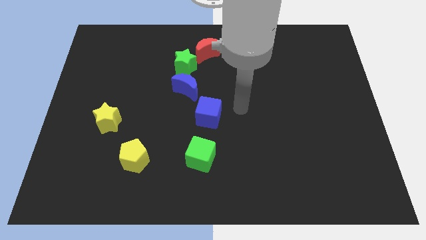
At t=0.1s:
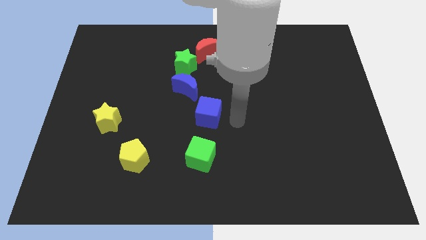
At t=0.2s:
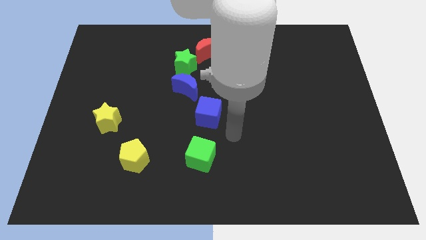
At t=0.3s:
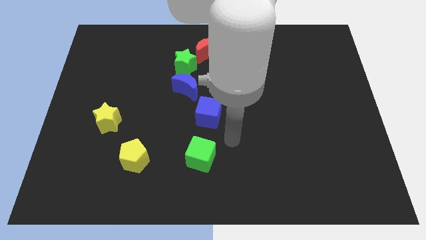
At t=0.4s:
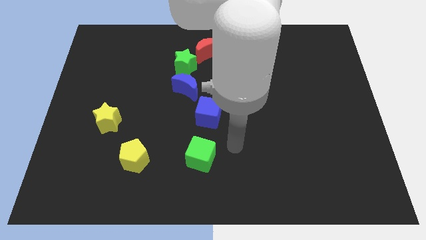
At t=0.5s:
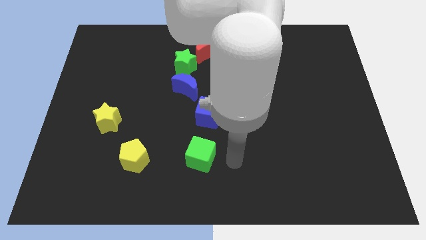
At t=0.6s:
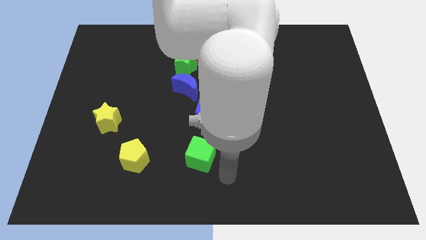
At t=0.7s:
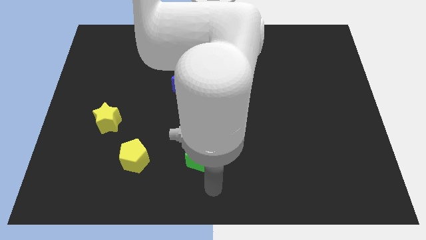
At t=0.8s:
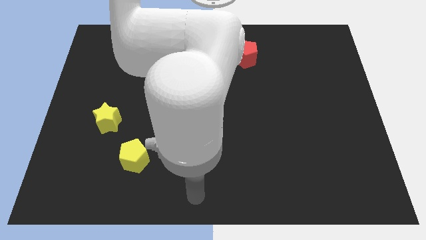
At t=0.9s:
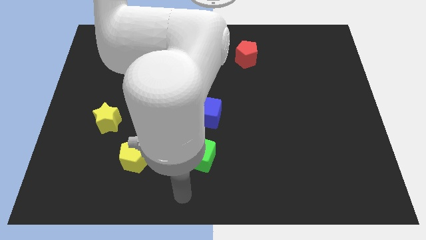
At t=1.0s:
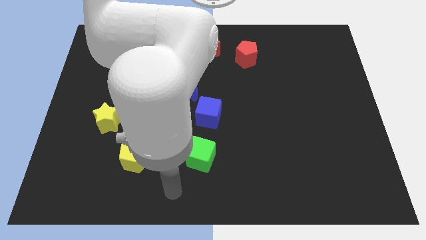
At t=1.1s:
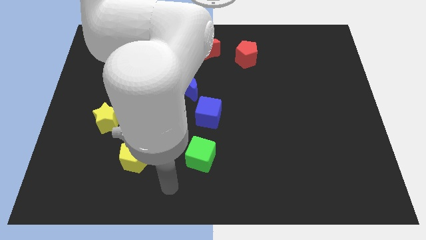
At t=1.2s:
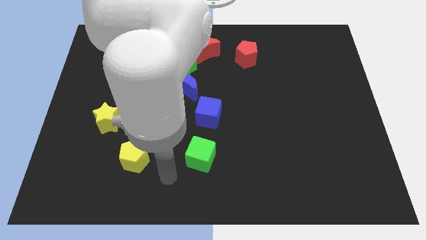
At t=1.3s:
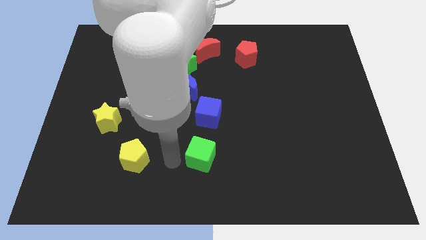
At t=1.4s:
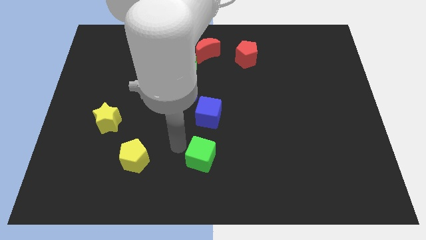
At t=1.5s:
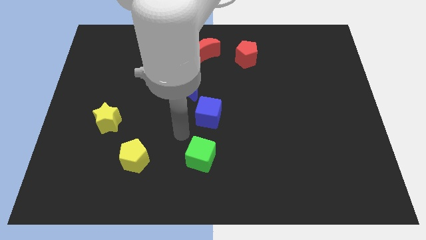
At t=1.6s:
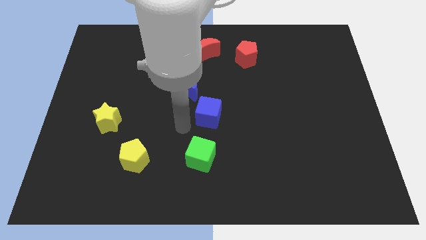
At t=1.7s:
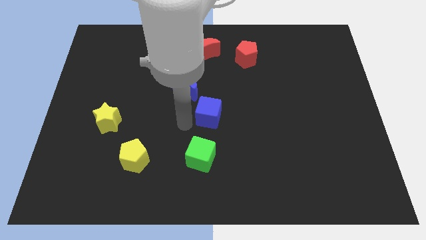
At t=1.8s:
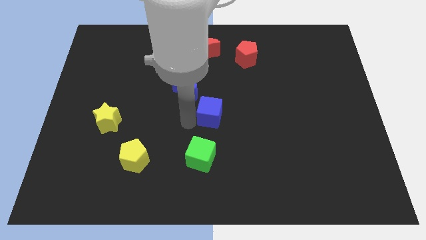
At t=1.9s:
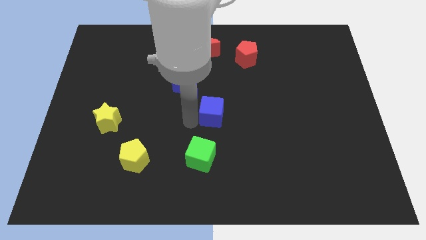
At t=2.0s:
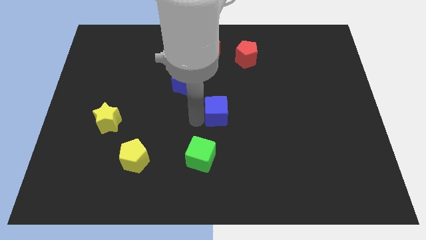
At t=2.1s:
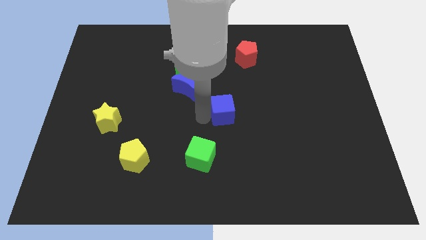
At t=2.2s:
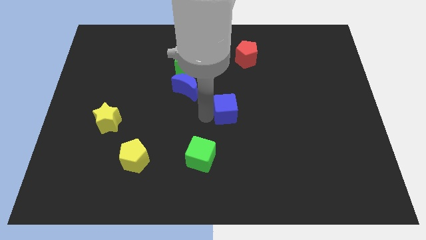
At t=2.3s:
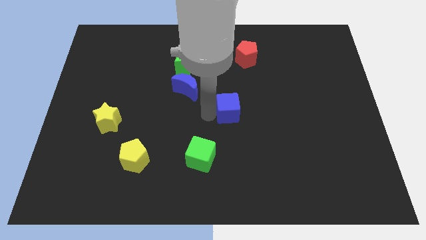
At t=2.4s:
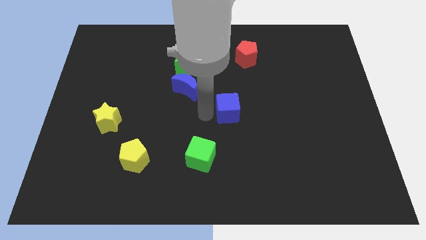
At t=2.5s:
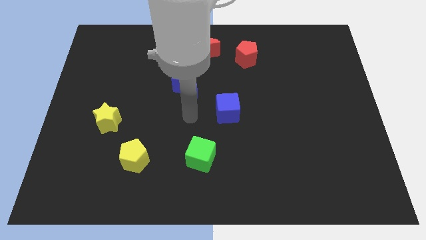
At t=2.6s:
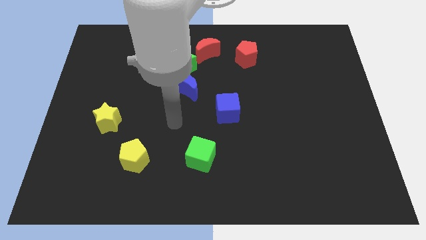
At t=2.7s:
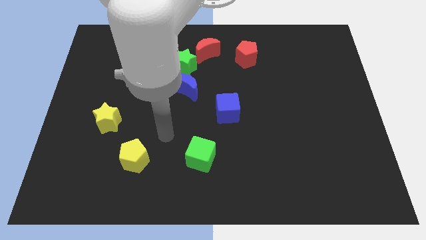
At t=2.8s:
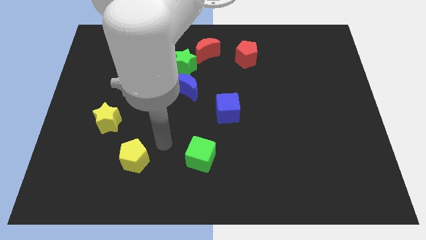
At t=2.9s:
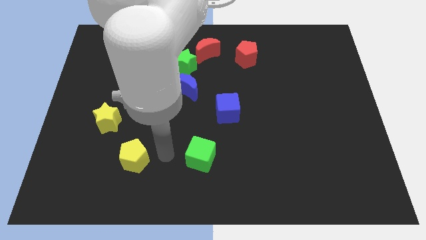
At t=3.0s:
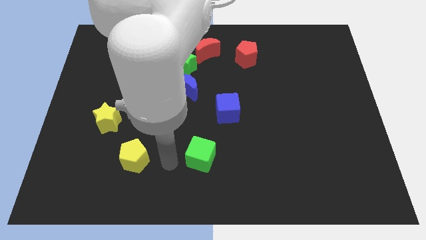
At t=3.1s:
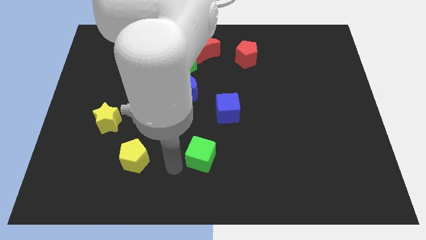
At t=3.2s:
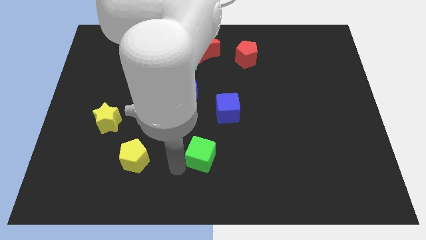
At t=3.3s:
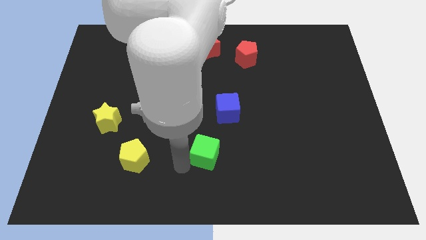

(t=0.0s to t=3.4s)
move the blue cube slightly towards the center of the board

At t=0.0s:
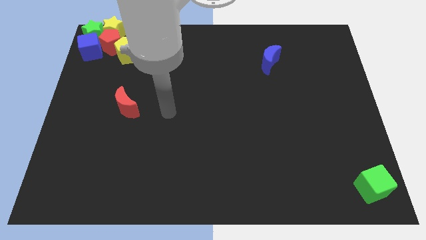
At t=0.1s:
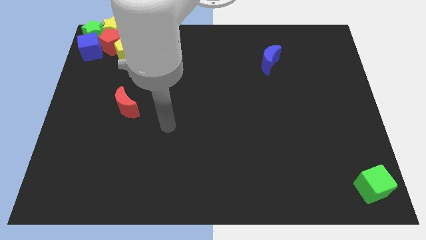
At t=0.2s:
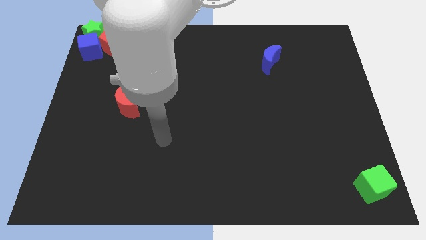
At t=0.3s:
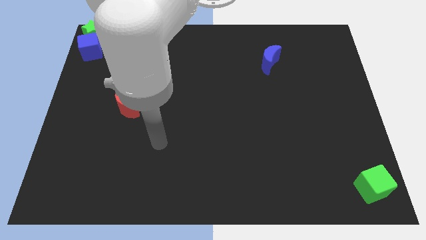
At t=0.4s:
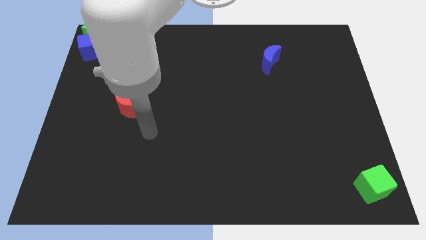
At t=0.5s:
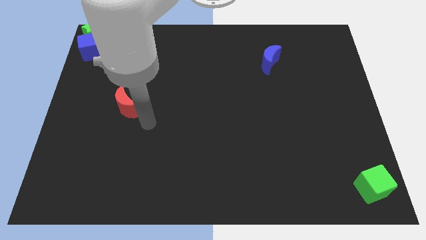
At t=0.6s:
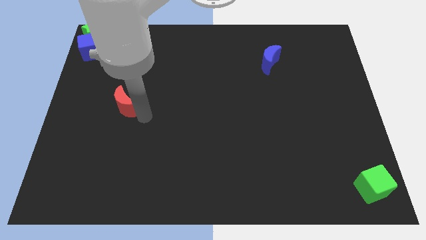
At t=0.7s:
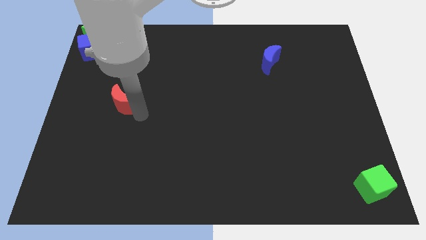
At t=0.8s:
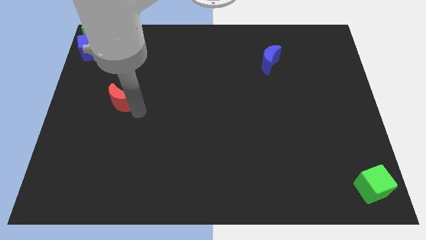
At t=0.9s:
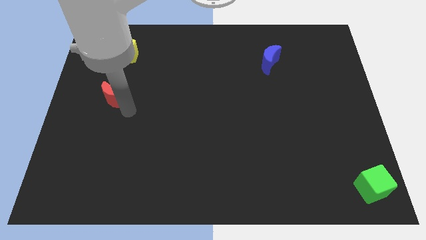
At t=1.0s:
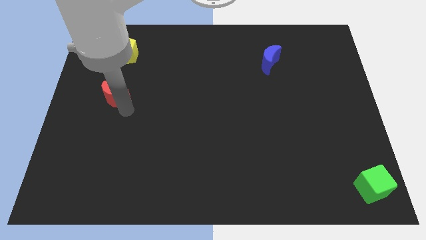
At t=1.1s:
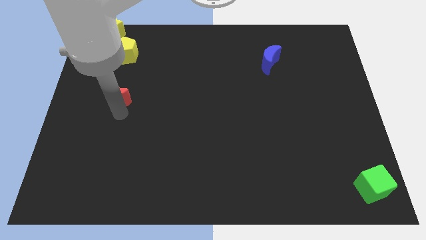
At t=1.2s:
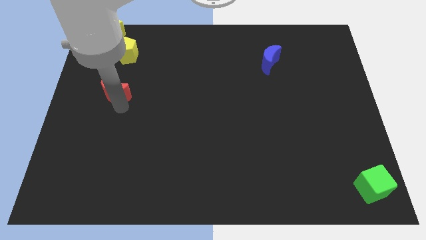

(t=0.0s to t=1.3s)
push the red crescent slightly to the top

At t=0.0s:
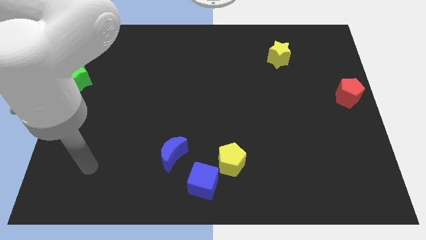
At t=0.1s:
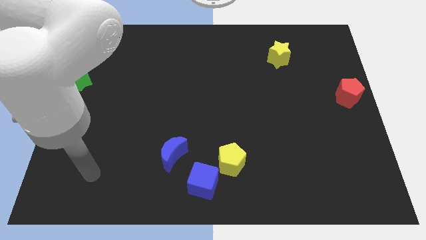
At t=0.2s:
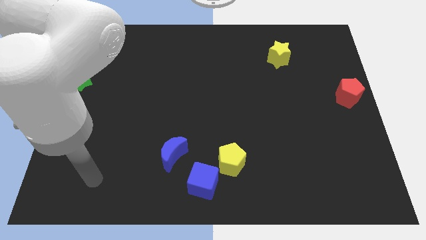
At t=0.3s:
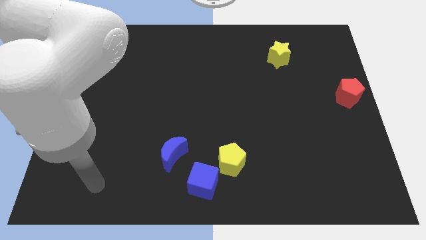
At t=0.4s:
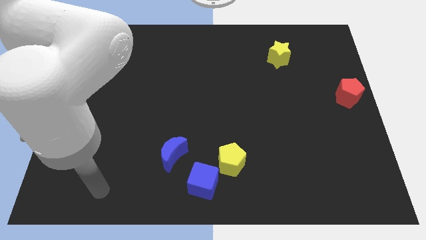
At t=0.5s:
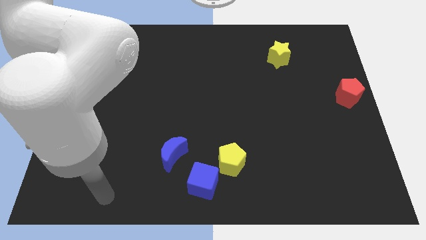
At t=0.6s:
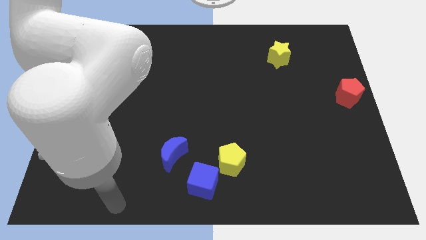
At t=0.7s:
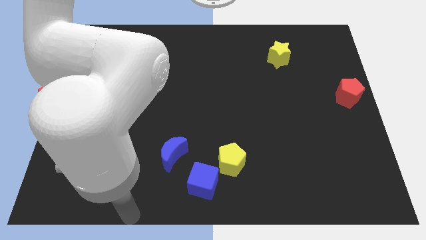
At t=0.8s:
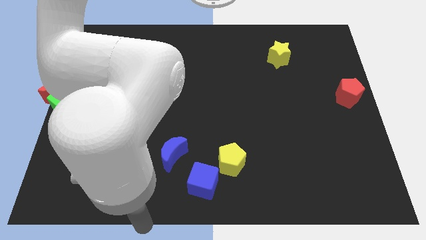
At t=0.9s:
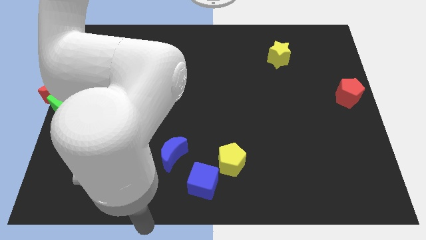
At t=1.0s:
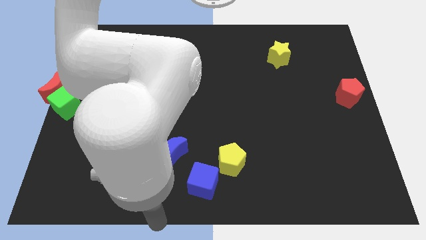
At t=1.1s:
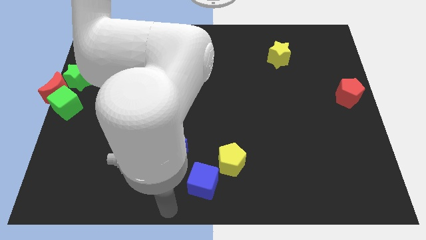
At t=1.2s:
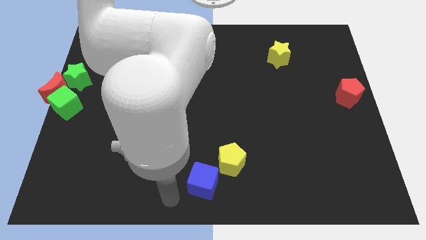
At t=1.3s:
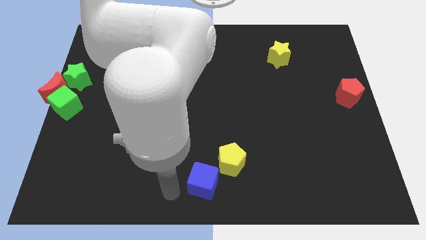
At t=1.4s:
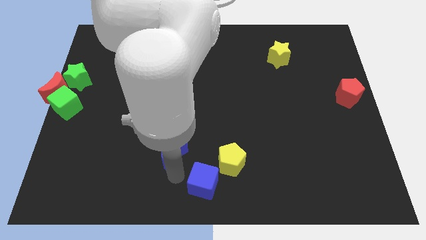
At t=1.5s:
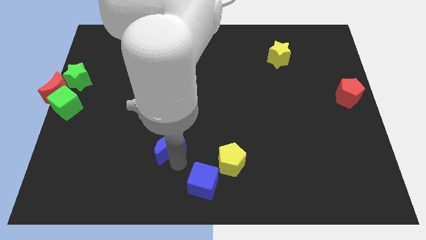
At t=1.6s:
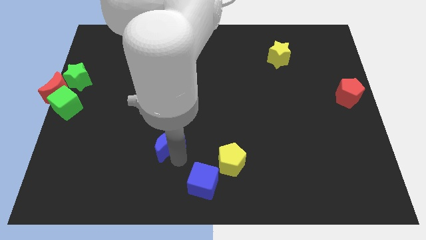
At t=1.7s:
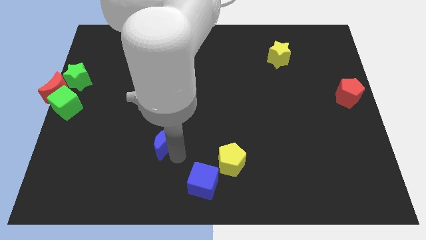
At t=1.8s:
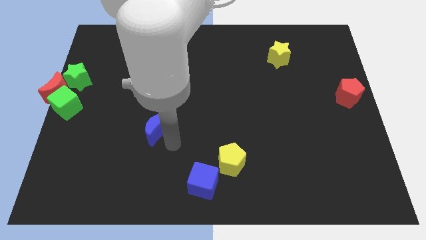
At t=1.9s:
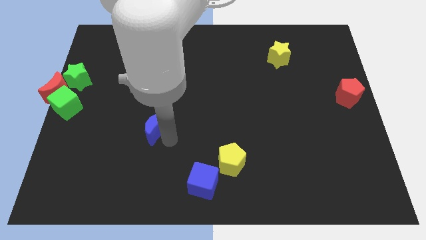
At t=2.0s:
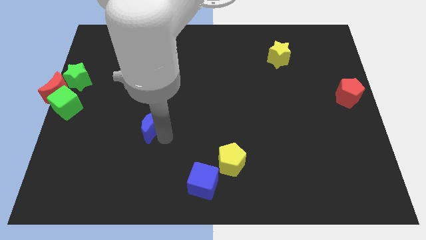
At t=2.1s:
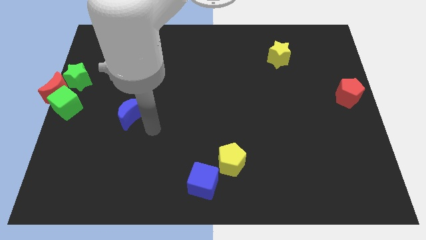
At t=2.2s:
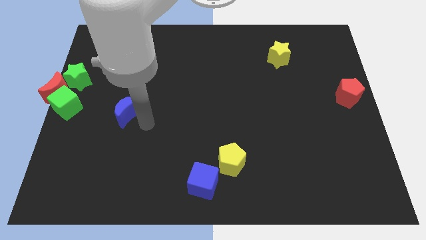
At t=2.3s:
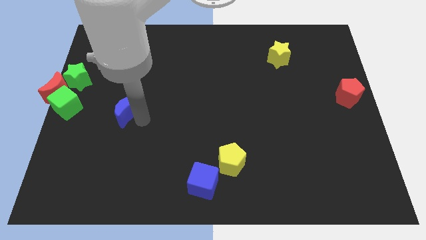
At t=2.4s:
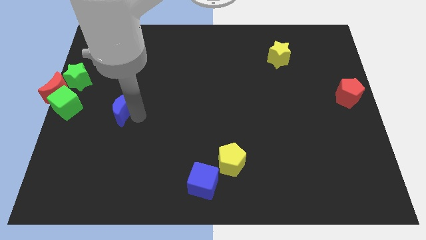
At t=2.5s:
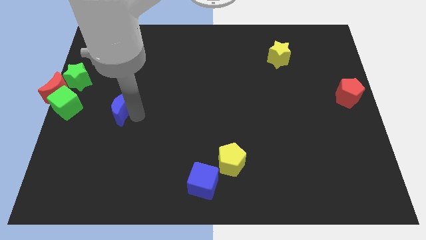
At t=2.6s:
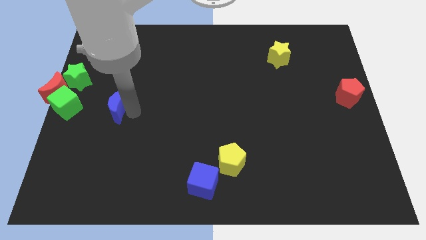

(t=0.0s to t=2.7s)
place the blue moon to the right of the green cube

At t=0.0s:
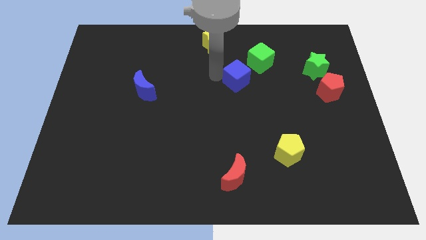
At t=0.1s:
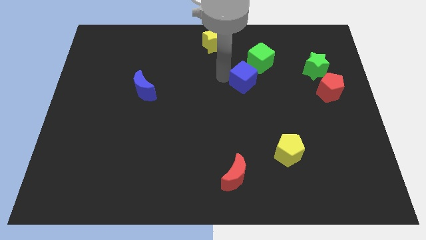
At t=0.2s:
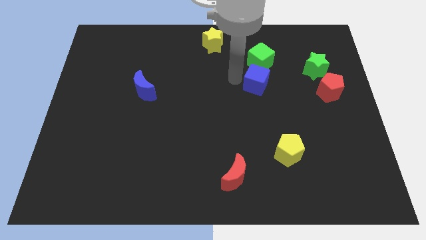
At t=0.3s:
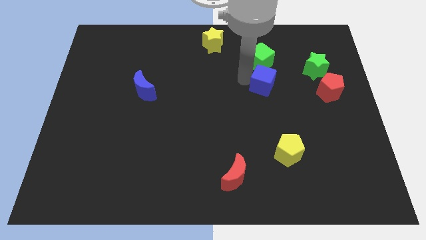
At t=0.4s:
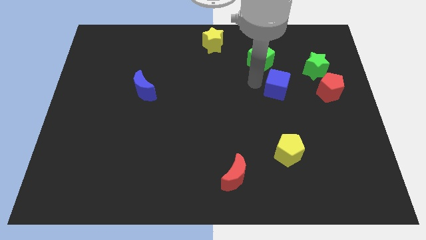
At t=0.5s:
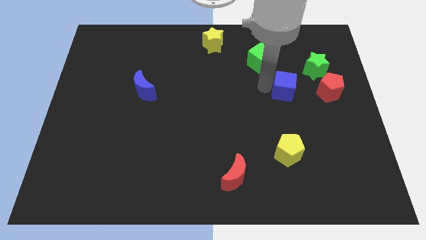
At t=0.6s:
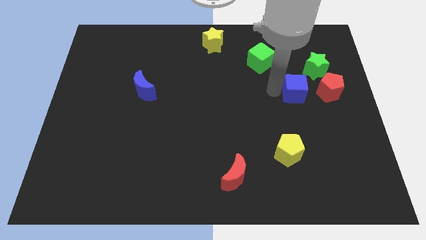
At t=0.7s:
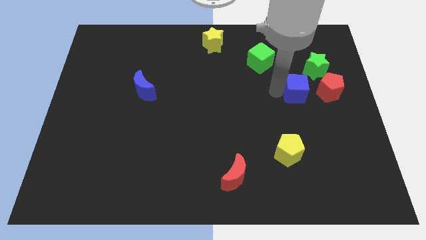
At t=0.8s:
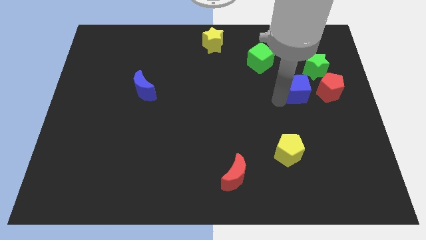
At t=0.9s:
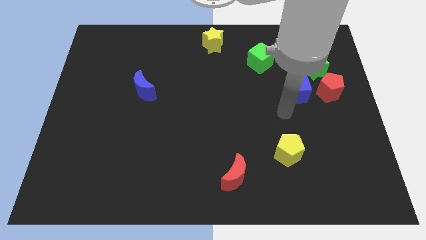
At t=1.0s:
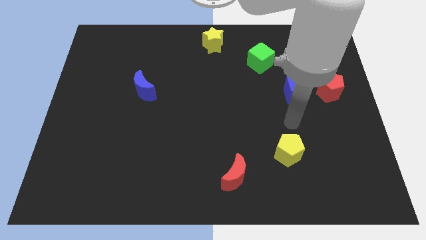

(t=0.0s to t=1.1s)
push blue cube towards red pentagon

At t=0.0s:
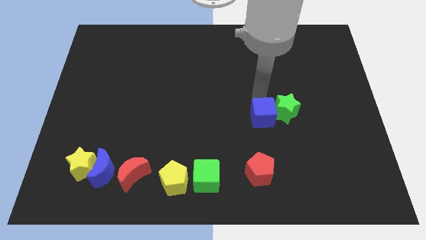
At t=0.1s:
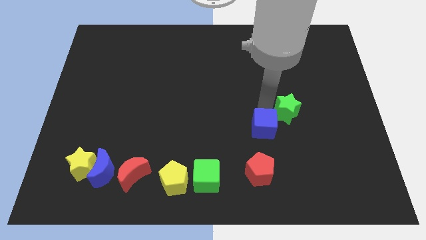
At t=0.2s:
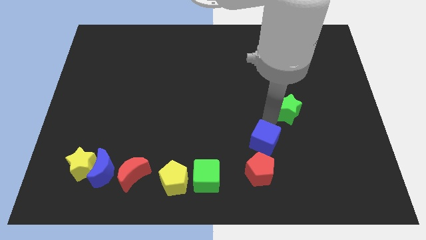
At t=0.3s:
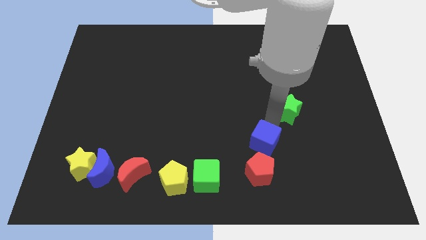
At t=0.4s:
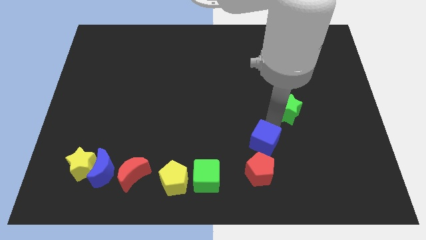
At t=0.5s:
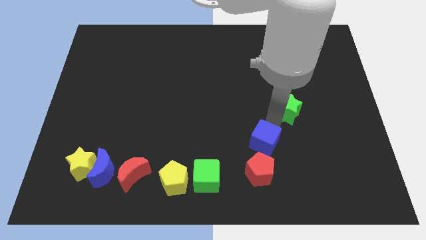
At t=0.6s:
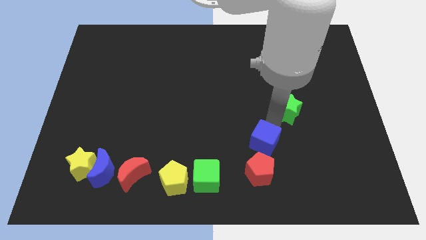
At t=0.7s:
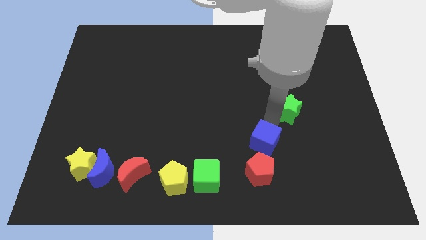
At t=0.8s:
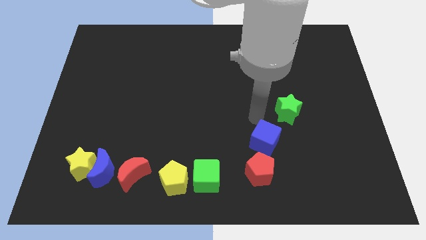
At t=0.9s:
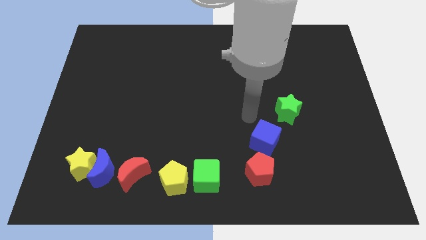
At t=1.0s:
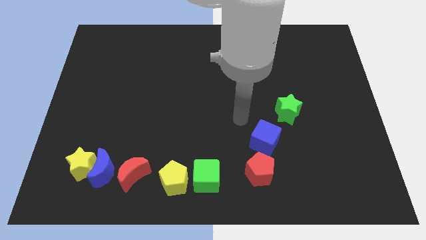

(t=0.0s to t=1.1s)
place the blue cube above the red pentagon
